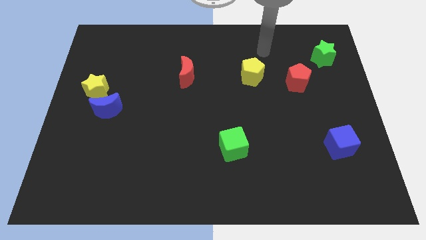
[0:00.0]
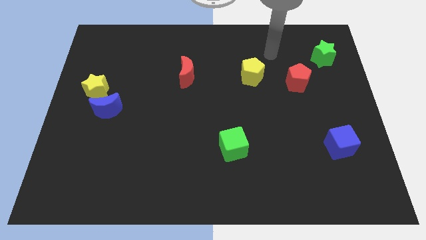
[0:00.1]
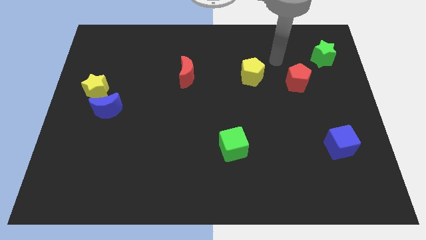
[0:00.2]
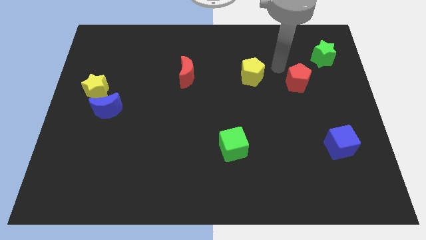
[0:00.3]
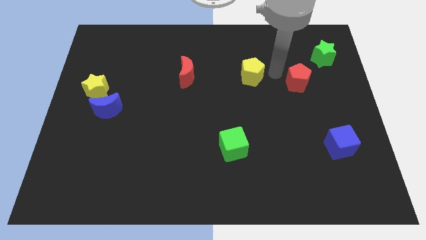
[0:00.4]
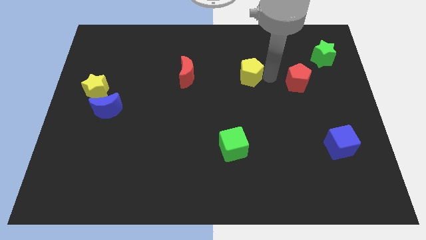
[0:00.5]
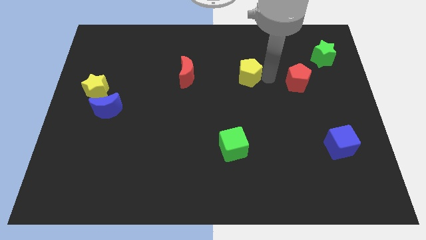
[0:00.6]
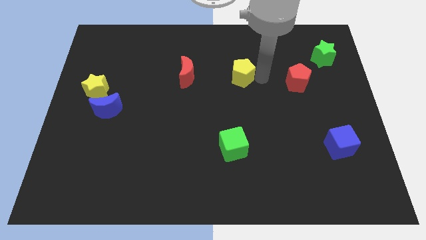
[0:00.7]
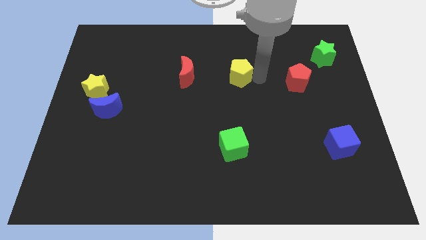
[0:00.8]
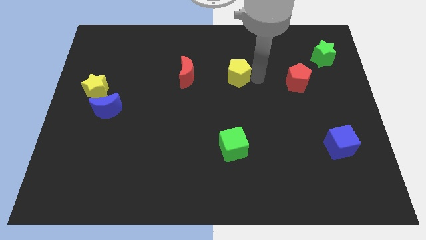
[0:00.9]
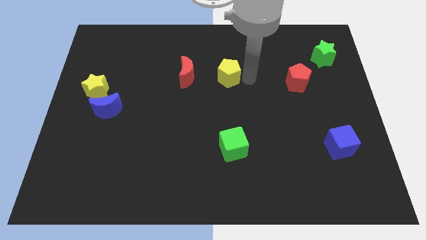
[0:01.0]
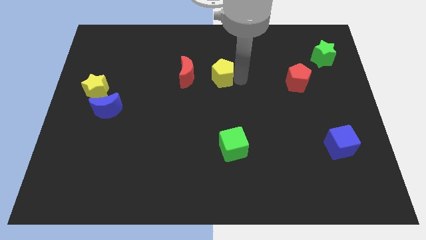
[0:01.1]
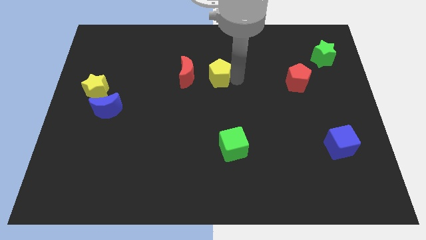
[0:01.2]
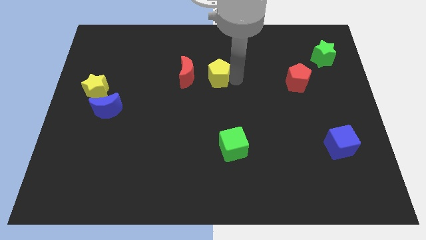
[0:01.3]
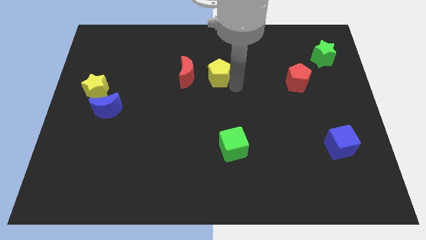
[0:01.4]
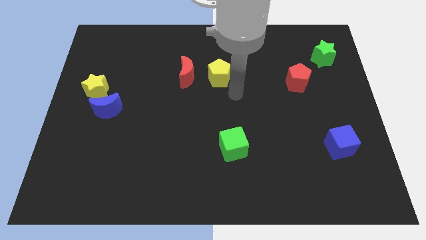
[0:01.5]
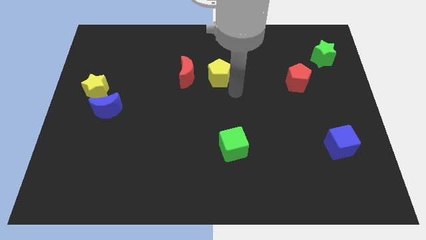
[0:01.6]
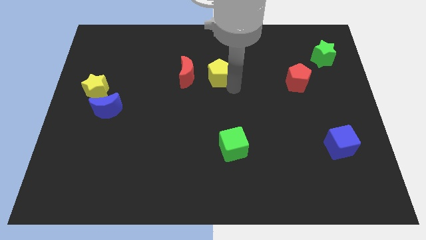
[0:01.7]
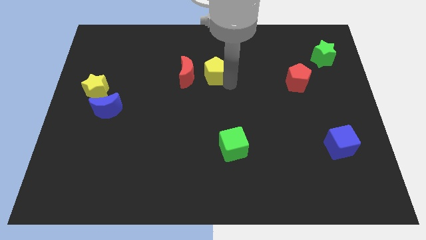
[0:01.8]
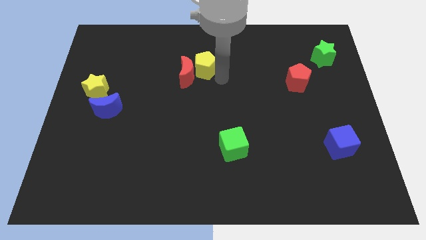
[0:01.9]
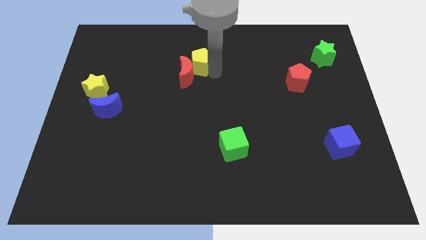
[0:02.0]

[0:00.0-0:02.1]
slide the yellow pentagon into the red moon

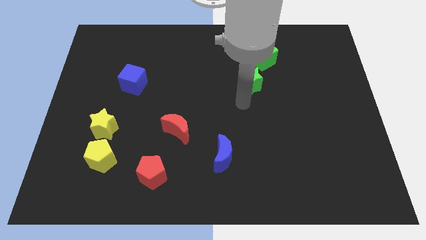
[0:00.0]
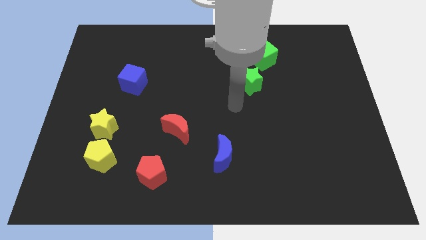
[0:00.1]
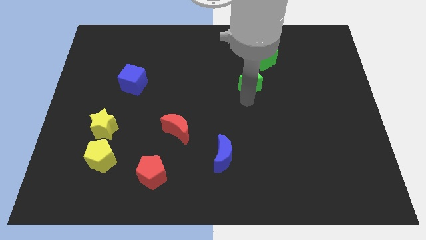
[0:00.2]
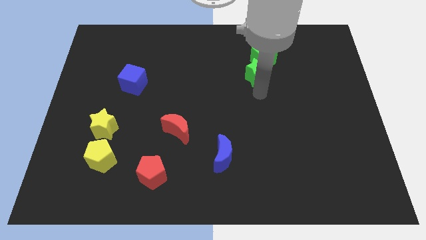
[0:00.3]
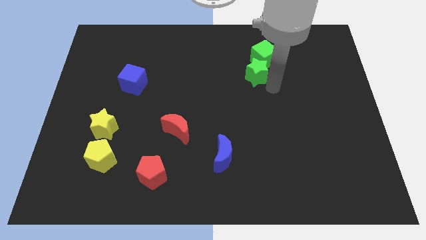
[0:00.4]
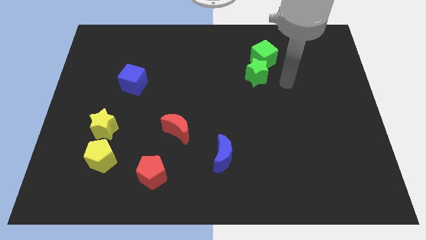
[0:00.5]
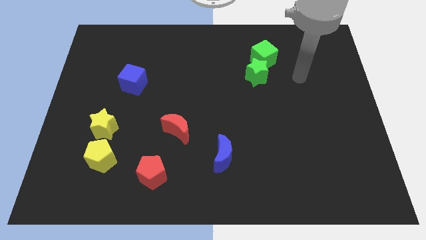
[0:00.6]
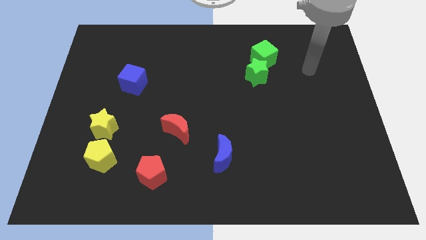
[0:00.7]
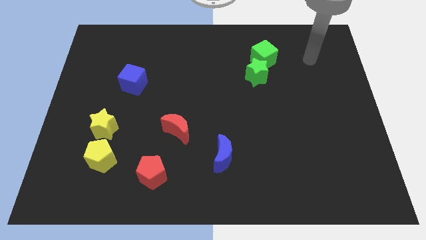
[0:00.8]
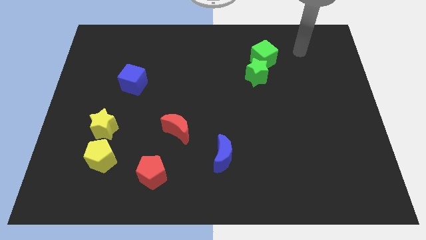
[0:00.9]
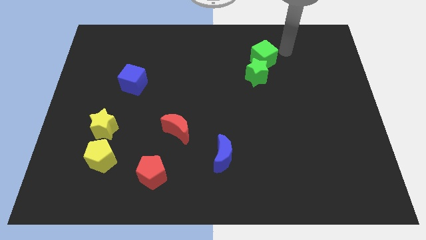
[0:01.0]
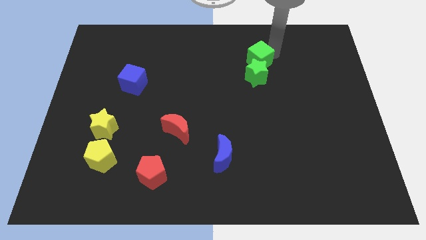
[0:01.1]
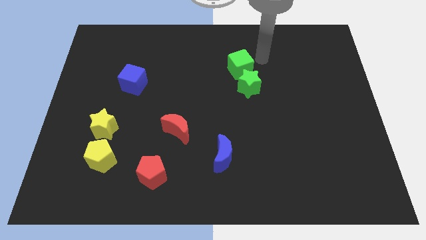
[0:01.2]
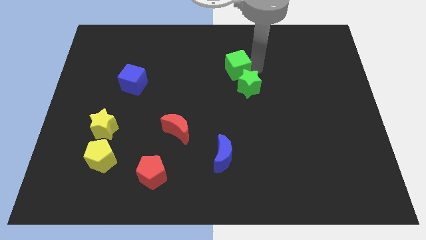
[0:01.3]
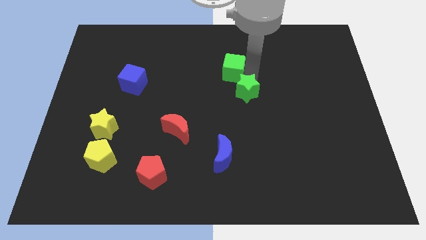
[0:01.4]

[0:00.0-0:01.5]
push the green star into the green cube

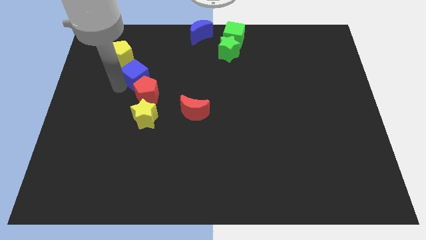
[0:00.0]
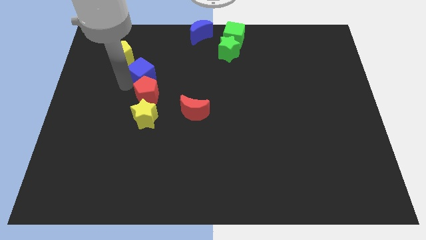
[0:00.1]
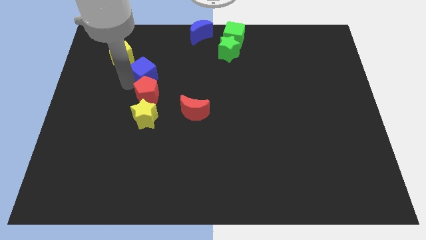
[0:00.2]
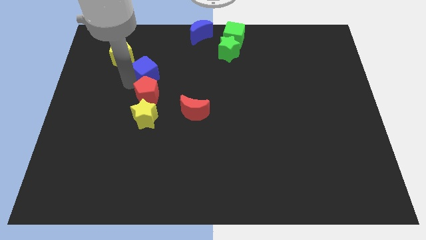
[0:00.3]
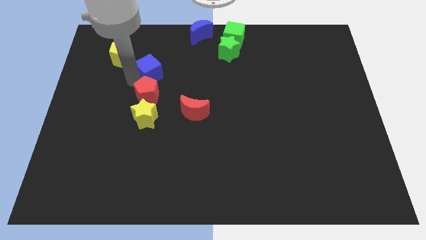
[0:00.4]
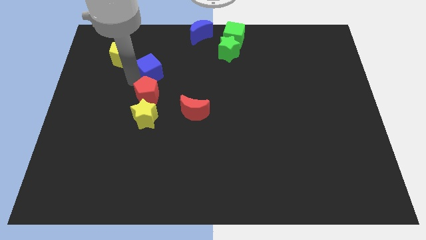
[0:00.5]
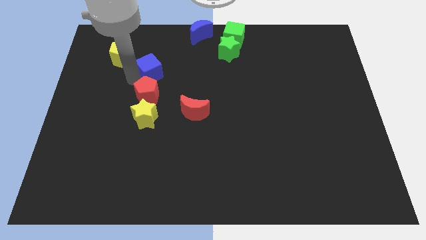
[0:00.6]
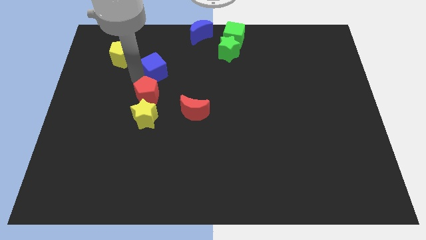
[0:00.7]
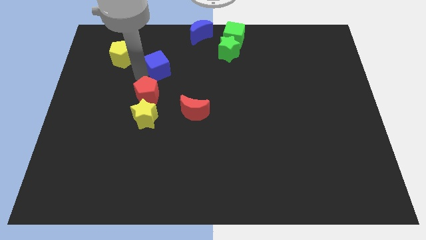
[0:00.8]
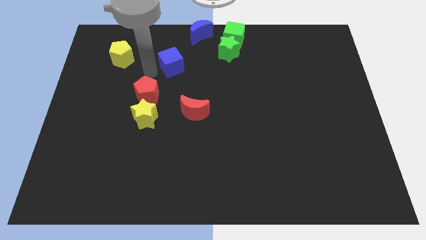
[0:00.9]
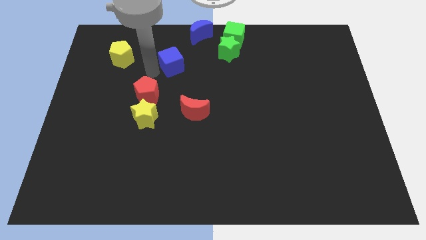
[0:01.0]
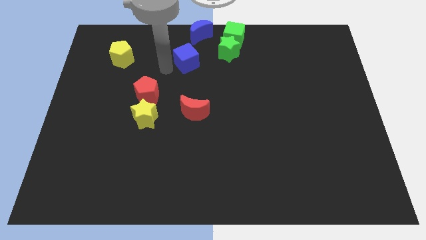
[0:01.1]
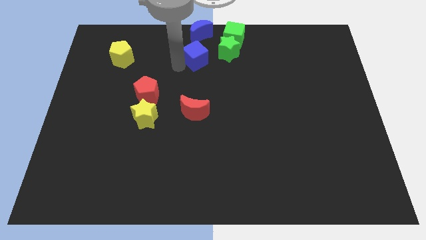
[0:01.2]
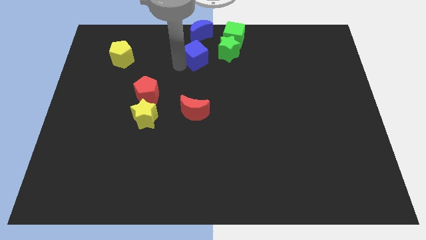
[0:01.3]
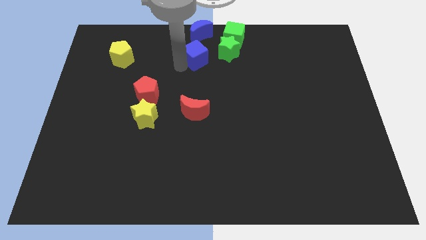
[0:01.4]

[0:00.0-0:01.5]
push the blue cube below the blue moon

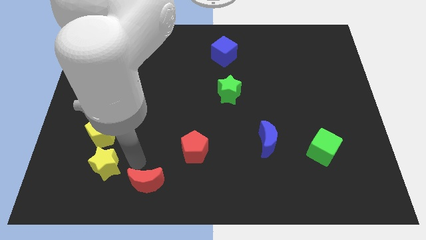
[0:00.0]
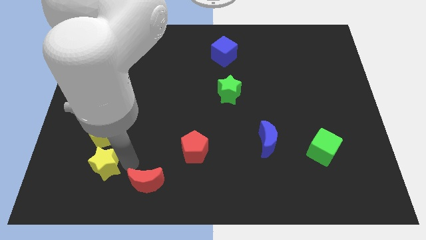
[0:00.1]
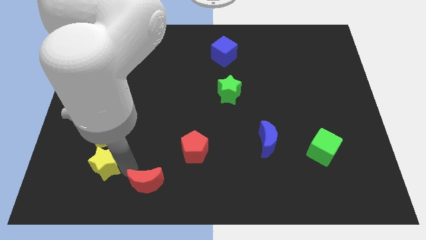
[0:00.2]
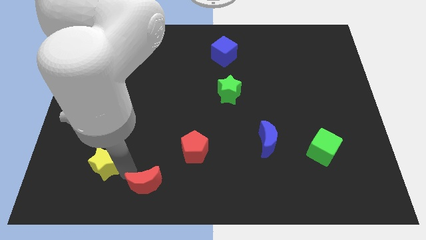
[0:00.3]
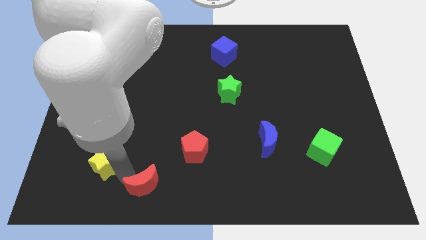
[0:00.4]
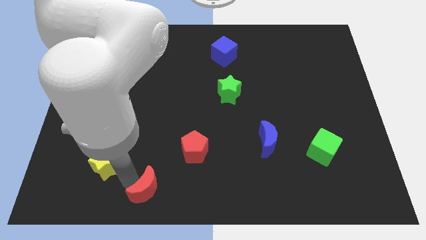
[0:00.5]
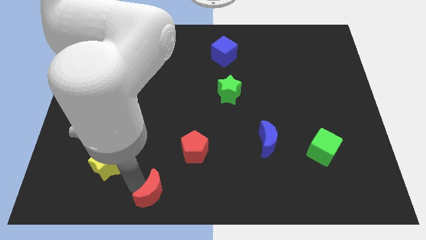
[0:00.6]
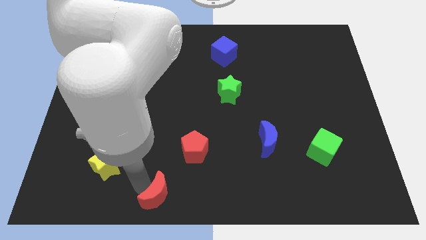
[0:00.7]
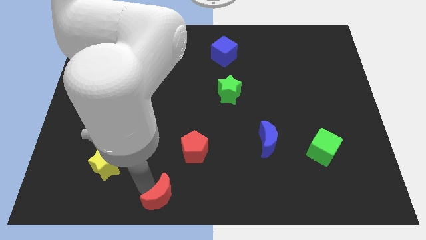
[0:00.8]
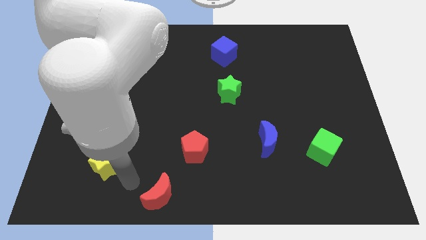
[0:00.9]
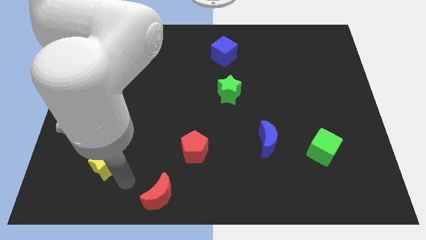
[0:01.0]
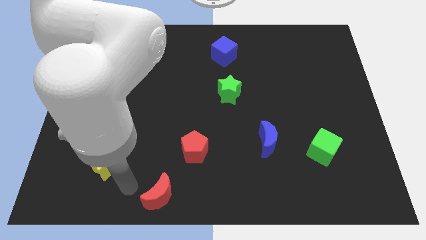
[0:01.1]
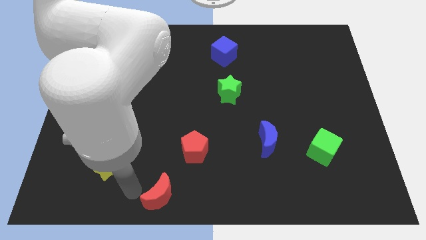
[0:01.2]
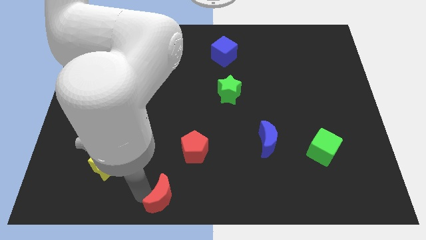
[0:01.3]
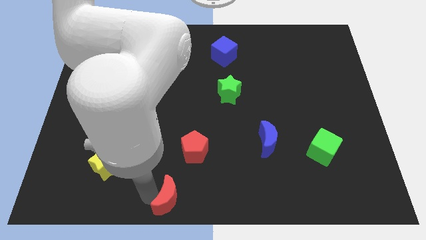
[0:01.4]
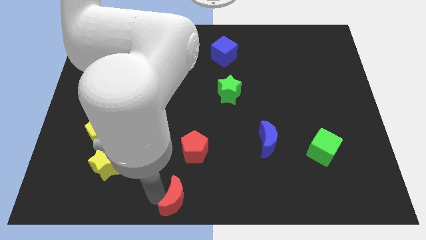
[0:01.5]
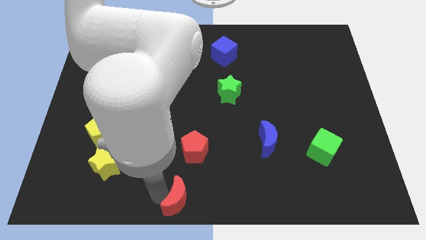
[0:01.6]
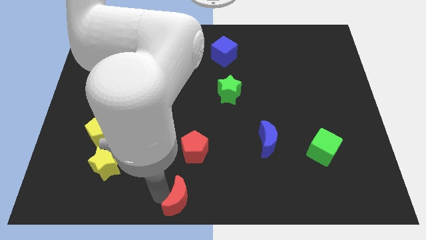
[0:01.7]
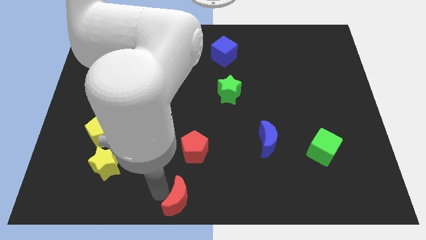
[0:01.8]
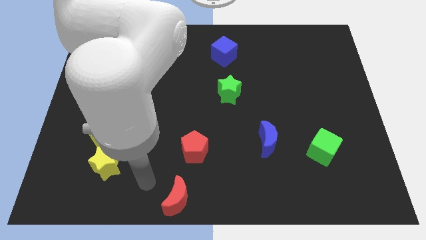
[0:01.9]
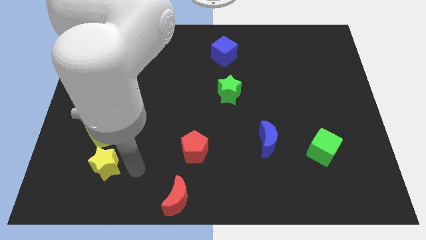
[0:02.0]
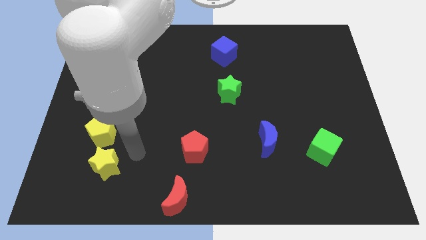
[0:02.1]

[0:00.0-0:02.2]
move red crescent to the bottom of the board

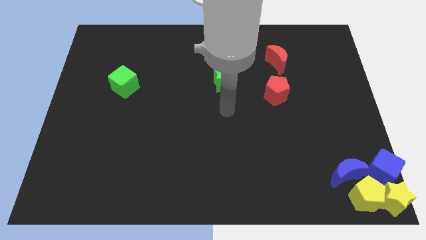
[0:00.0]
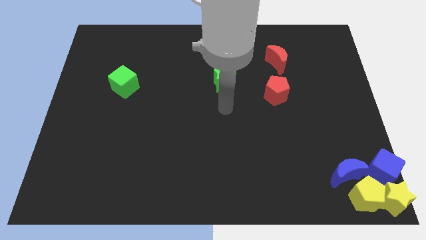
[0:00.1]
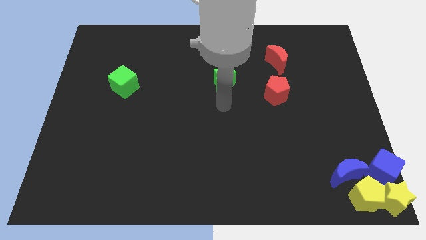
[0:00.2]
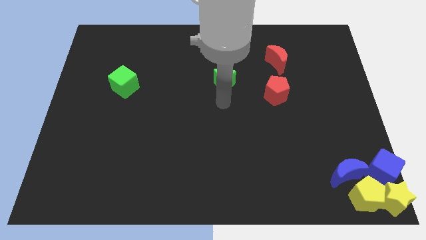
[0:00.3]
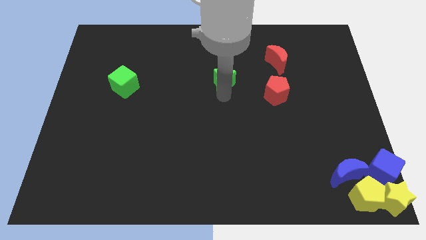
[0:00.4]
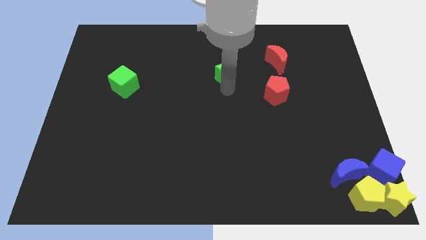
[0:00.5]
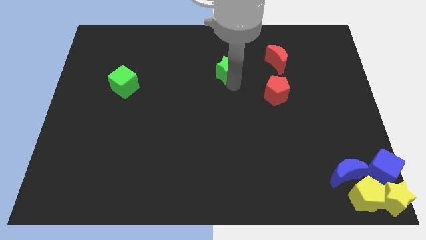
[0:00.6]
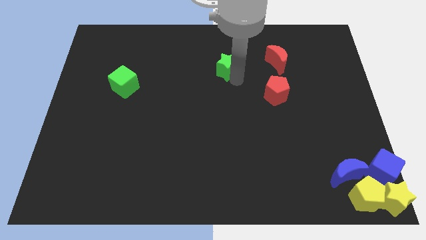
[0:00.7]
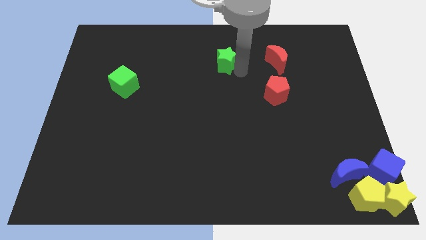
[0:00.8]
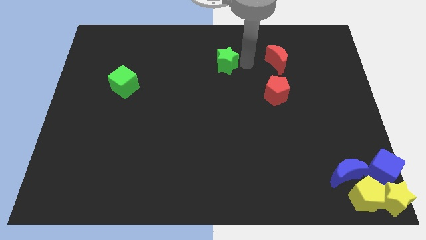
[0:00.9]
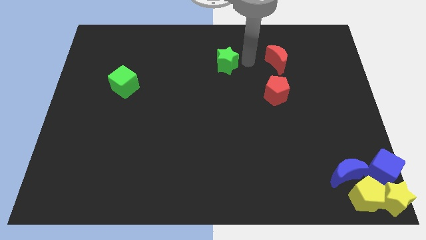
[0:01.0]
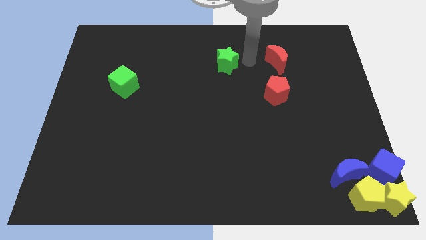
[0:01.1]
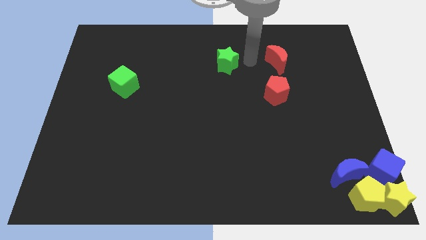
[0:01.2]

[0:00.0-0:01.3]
push the green star towards the top center
